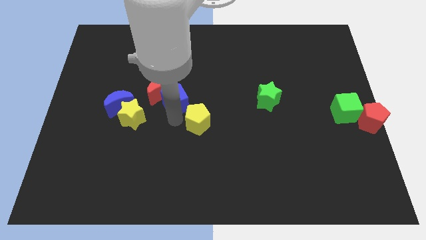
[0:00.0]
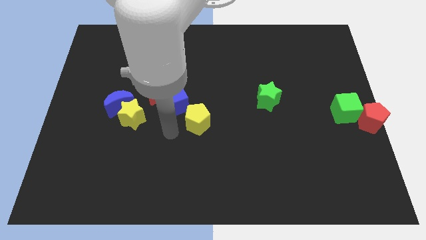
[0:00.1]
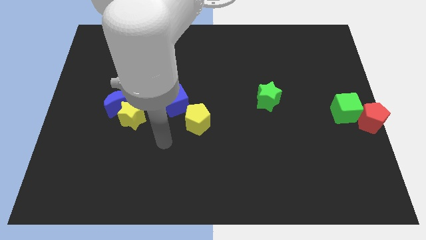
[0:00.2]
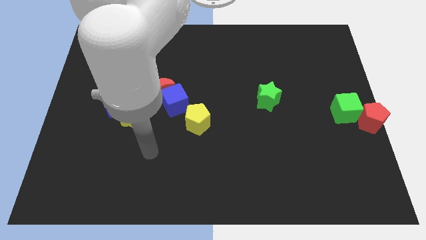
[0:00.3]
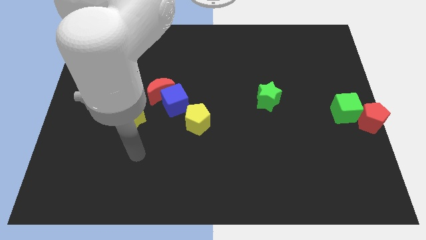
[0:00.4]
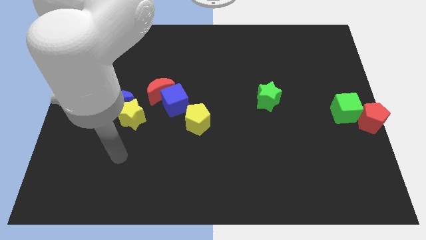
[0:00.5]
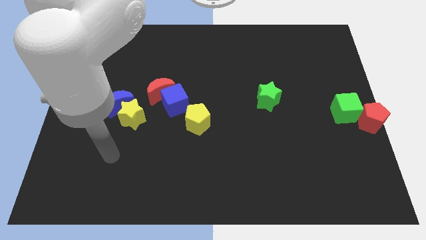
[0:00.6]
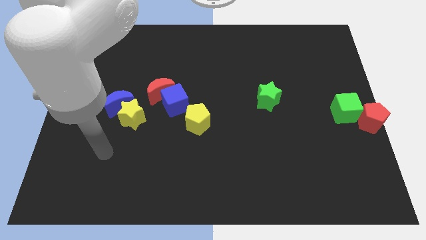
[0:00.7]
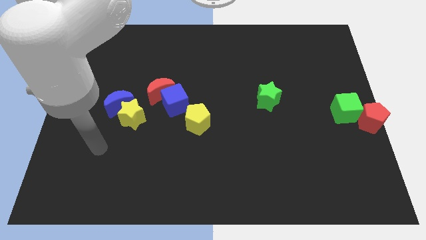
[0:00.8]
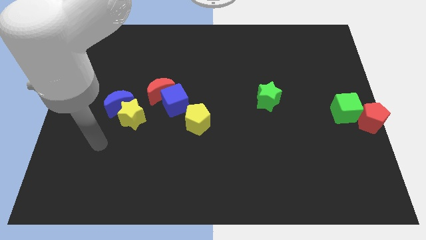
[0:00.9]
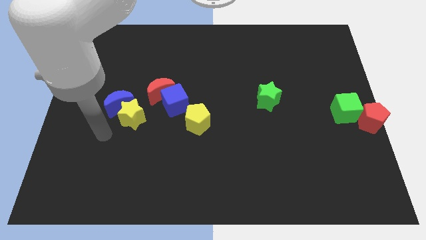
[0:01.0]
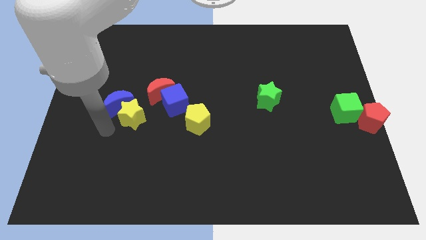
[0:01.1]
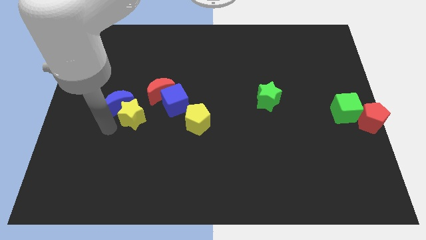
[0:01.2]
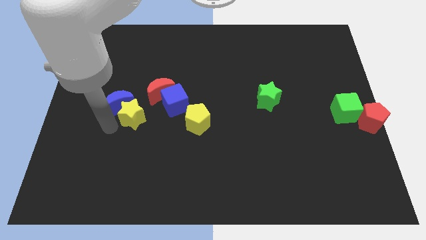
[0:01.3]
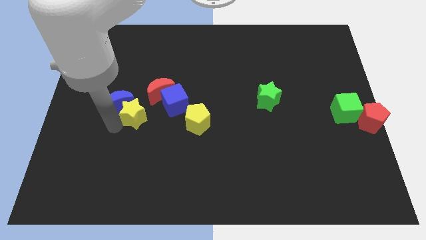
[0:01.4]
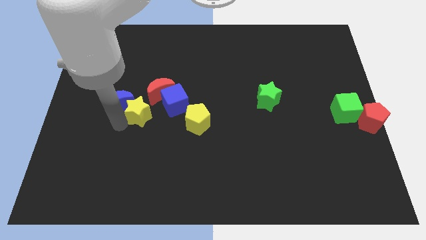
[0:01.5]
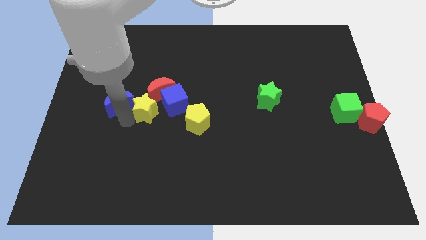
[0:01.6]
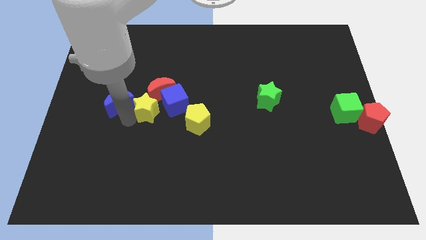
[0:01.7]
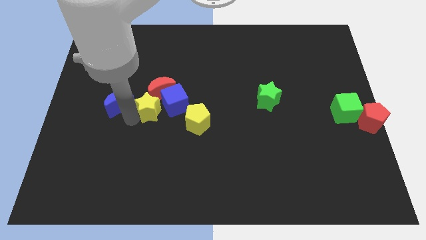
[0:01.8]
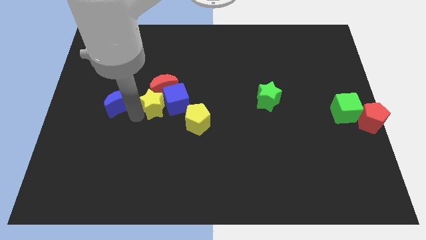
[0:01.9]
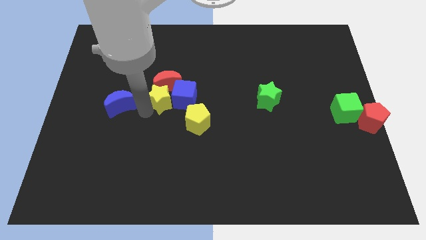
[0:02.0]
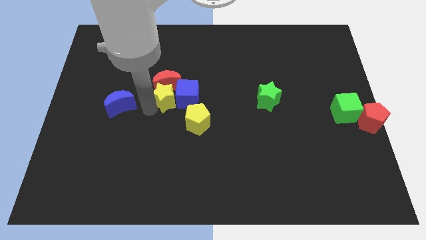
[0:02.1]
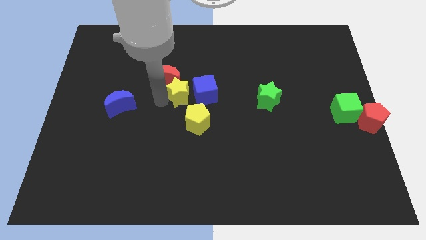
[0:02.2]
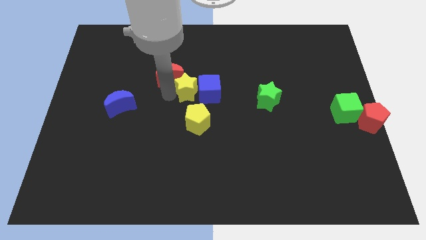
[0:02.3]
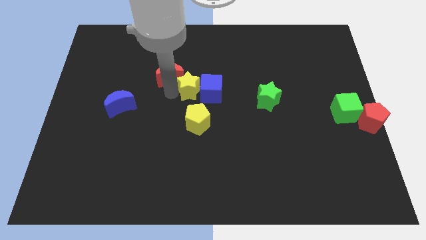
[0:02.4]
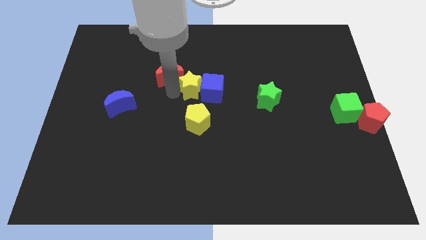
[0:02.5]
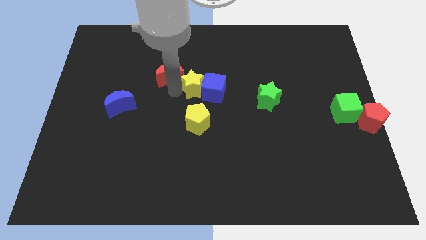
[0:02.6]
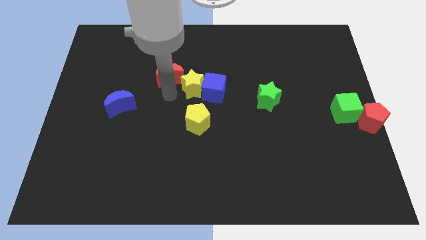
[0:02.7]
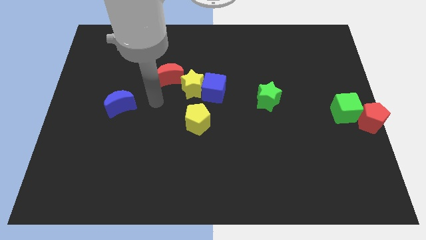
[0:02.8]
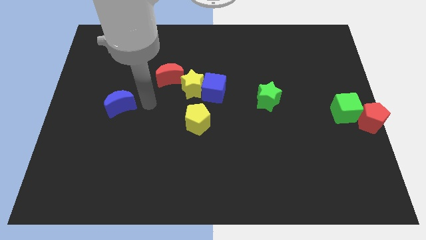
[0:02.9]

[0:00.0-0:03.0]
push the yellow star blue cube and red moon towards the top side of the board

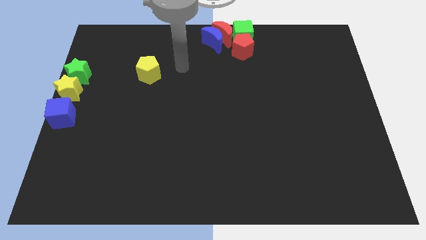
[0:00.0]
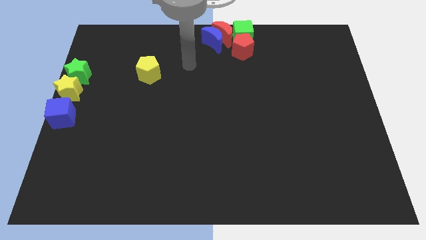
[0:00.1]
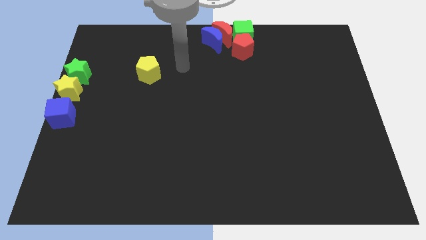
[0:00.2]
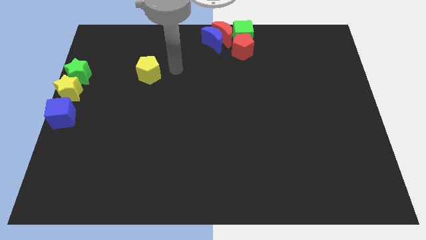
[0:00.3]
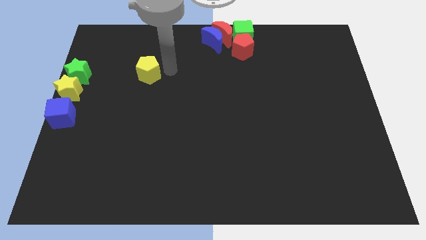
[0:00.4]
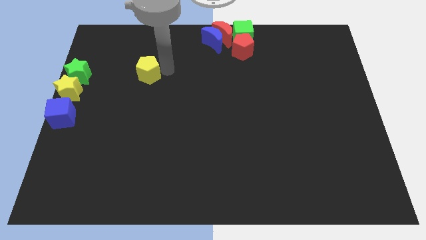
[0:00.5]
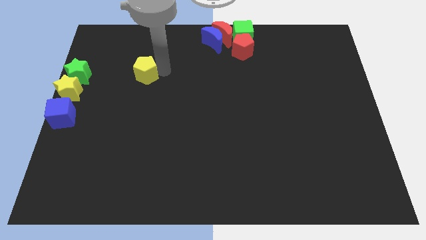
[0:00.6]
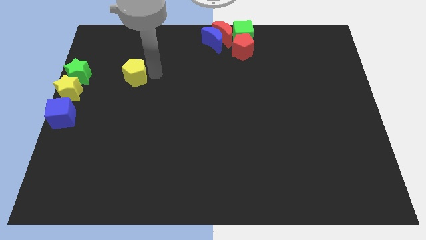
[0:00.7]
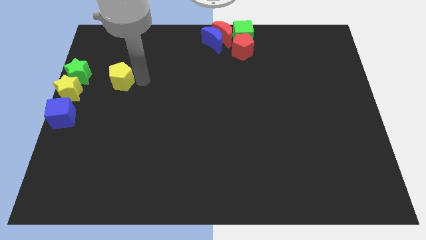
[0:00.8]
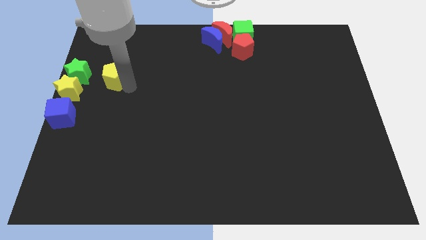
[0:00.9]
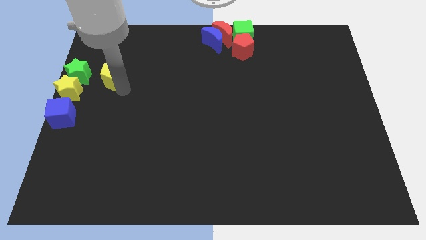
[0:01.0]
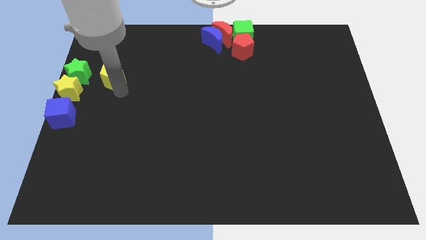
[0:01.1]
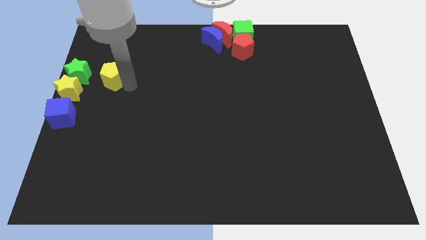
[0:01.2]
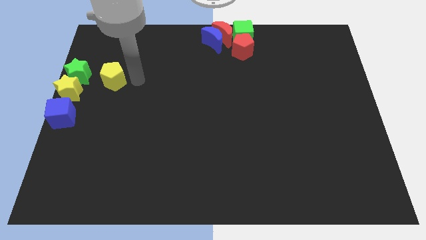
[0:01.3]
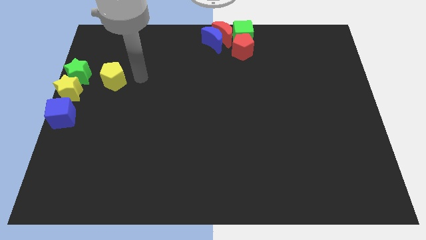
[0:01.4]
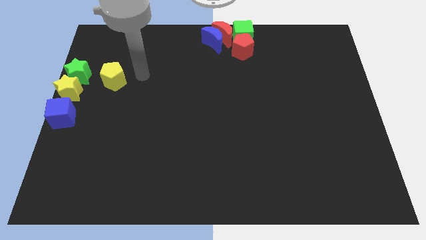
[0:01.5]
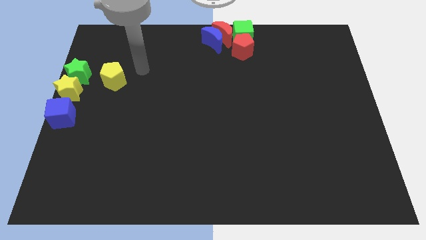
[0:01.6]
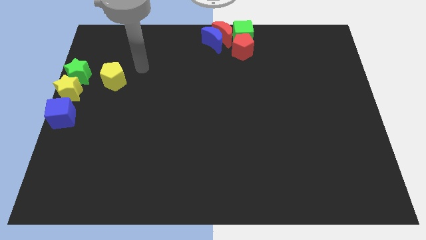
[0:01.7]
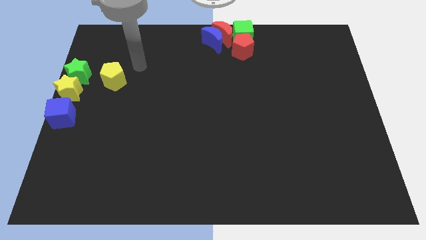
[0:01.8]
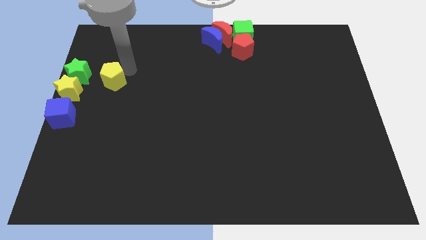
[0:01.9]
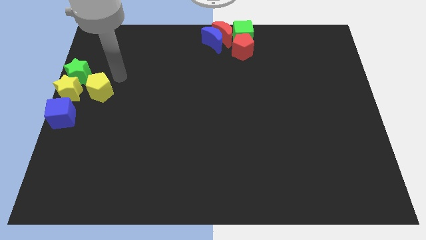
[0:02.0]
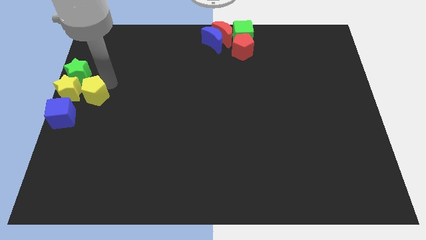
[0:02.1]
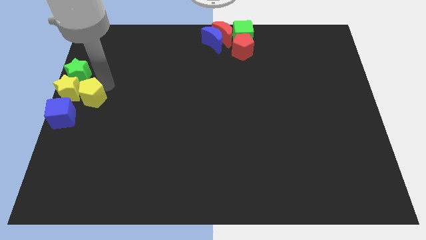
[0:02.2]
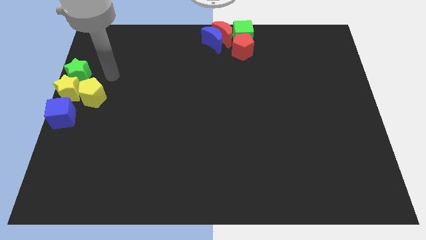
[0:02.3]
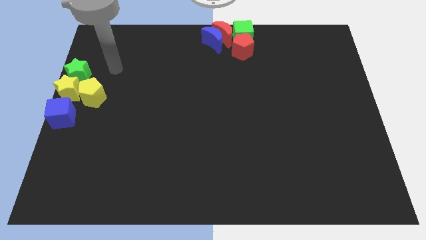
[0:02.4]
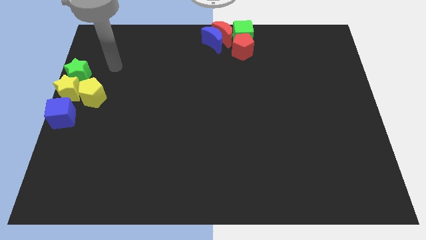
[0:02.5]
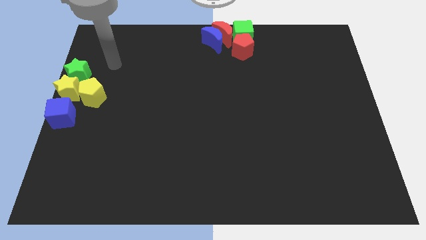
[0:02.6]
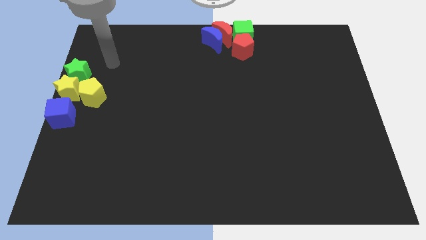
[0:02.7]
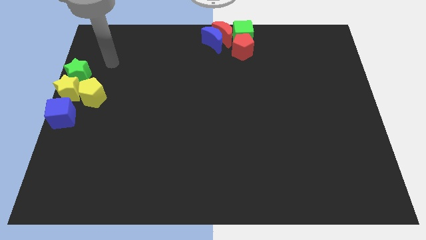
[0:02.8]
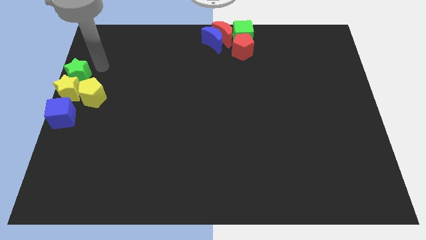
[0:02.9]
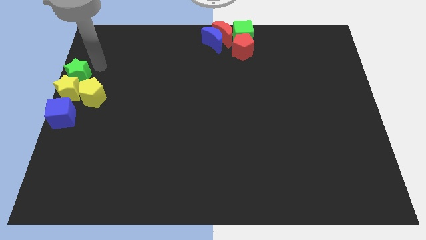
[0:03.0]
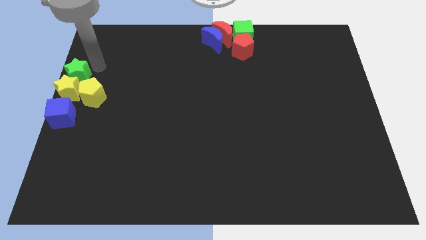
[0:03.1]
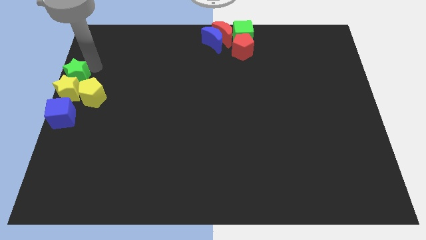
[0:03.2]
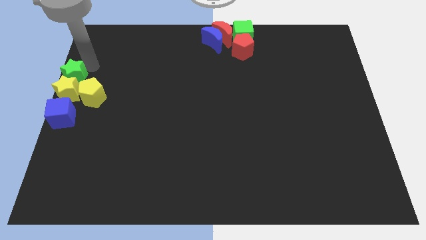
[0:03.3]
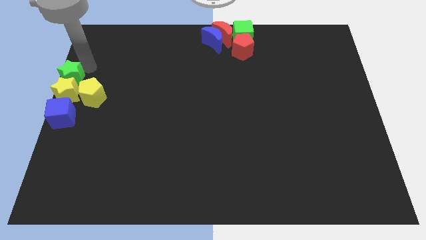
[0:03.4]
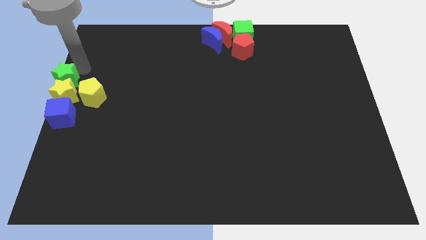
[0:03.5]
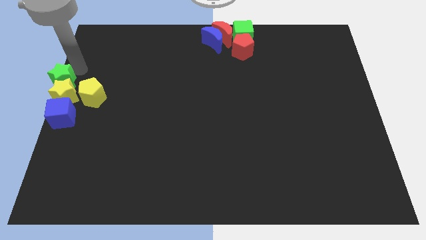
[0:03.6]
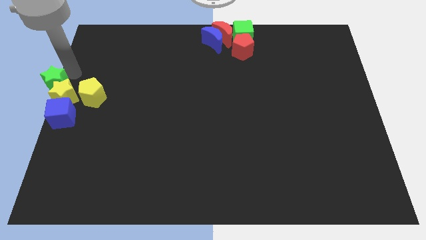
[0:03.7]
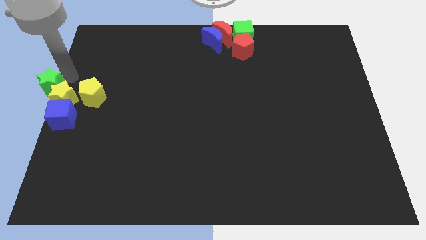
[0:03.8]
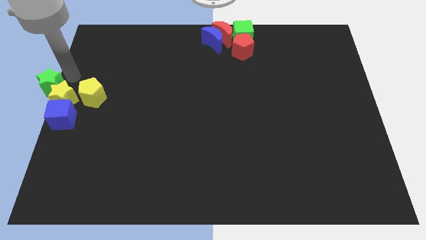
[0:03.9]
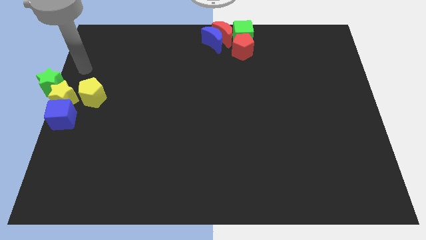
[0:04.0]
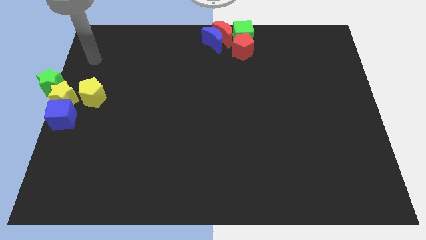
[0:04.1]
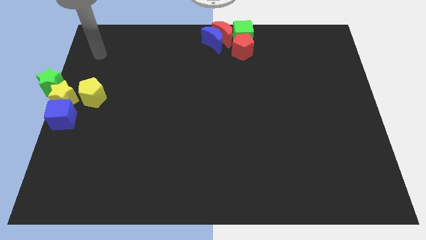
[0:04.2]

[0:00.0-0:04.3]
push the green star into the yellow star

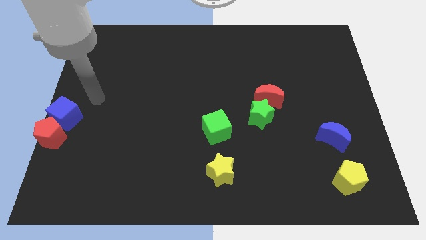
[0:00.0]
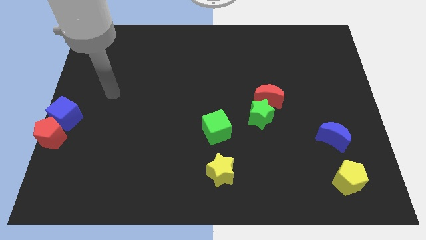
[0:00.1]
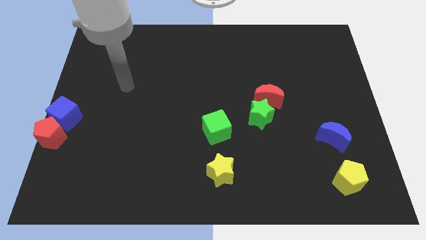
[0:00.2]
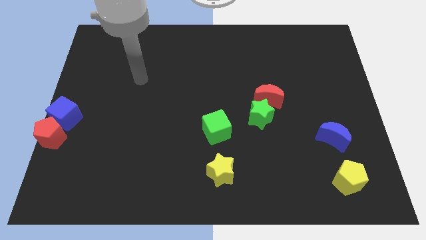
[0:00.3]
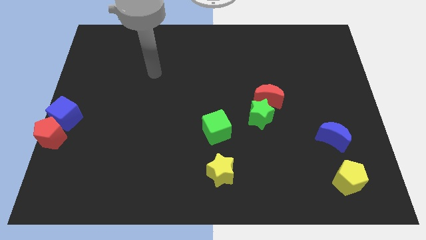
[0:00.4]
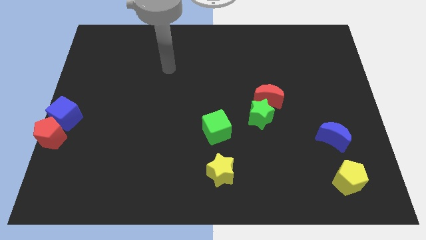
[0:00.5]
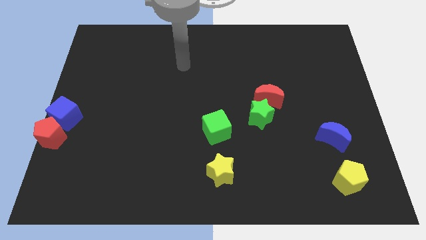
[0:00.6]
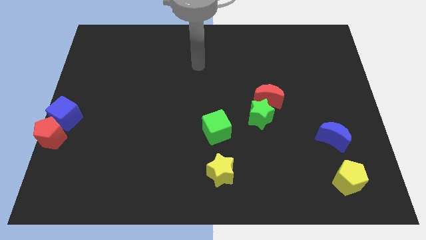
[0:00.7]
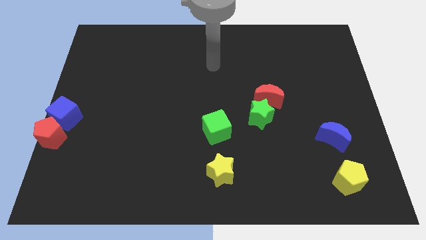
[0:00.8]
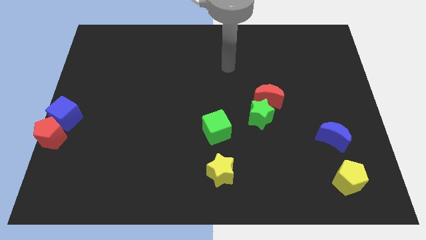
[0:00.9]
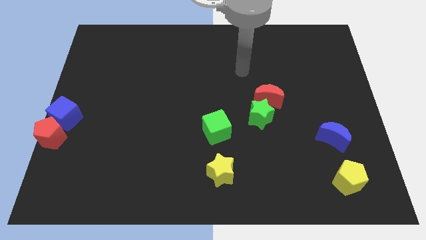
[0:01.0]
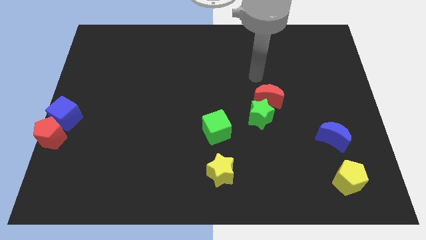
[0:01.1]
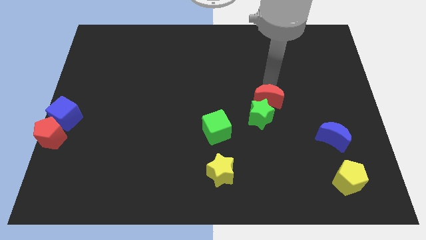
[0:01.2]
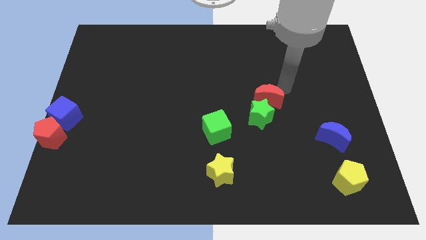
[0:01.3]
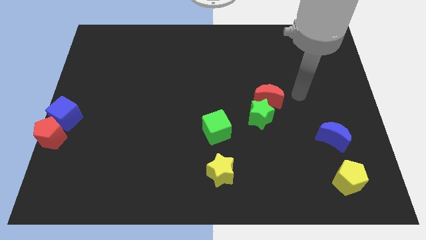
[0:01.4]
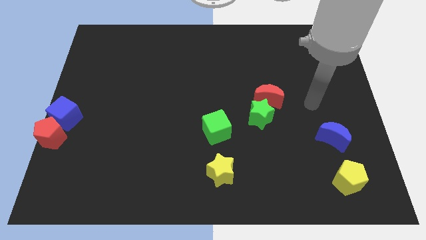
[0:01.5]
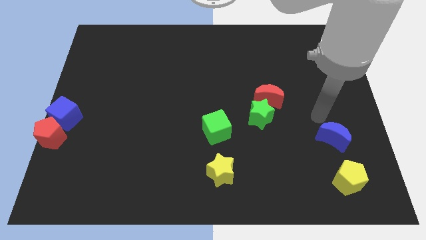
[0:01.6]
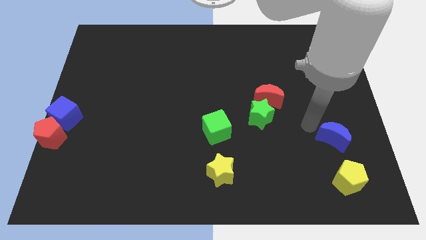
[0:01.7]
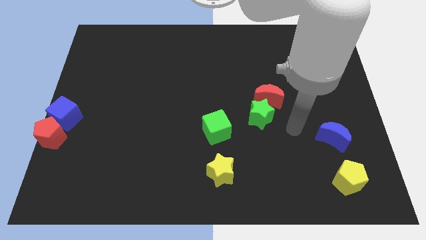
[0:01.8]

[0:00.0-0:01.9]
move the arm towards right to the green star
